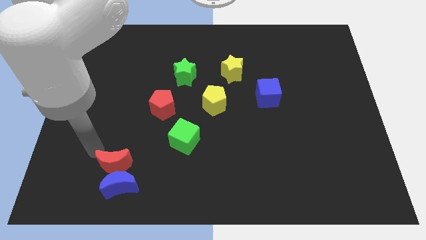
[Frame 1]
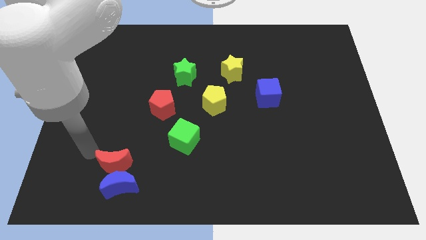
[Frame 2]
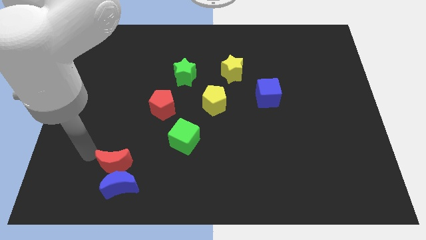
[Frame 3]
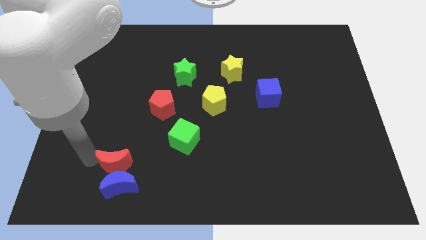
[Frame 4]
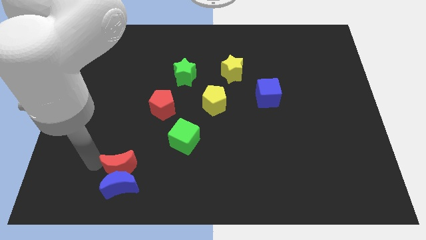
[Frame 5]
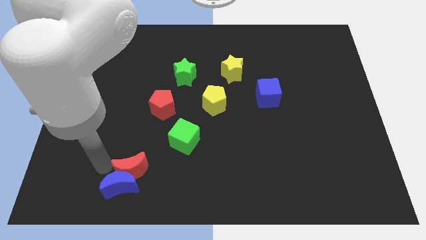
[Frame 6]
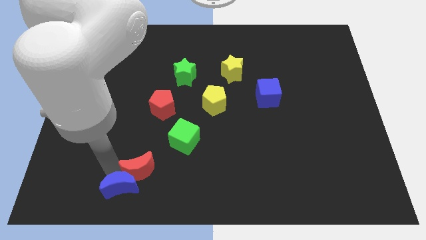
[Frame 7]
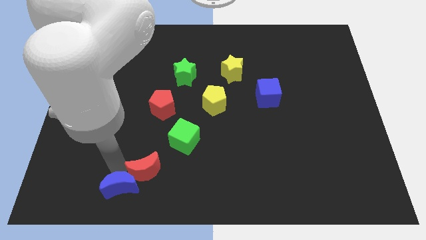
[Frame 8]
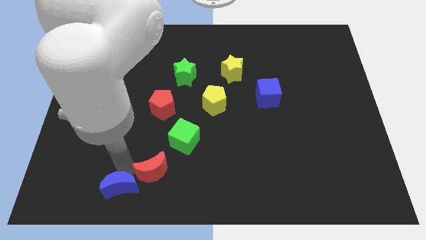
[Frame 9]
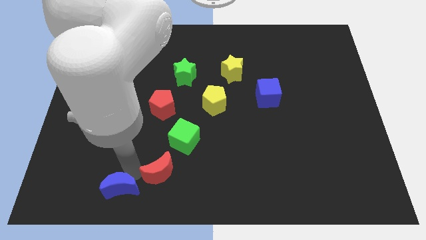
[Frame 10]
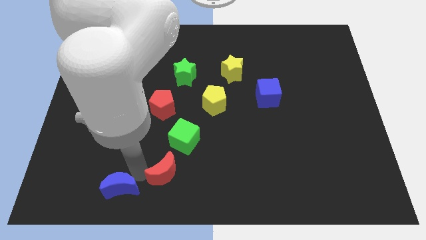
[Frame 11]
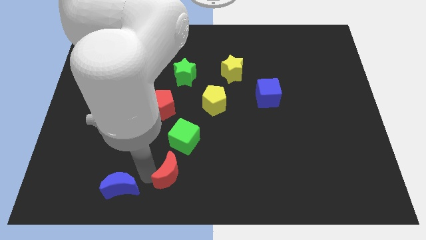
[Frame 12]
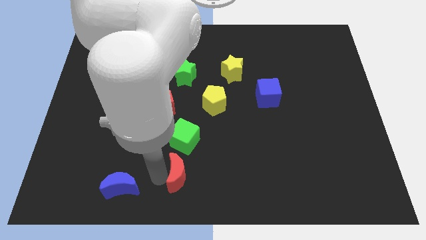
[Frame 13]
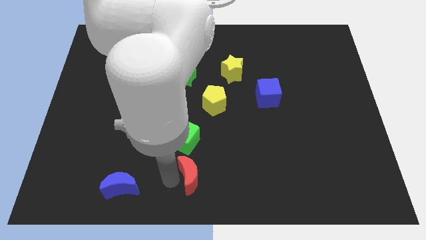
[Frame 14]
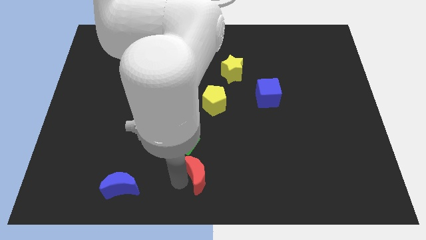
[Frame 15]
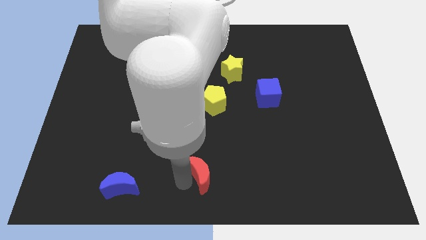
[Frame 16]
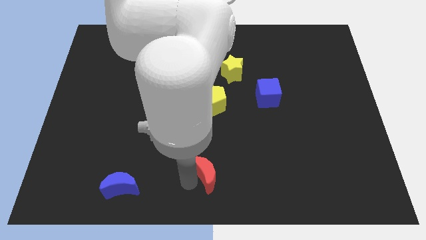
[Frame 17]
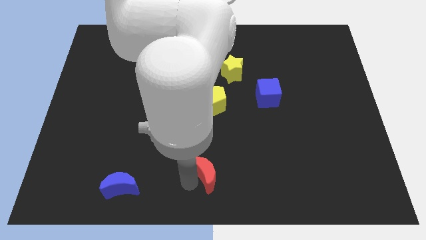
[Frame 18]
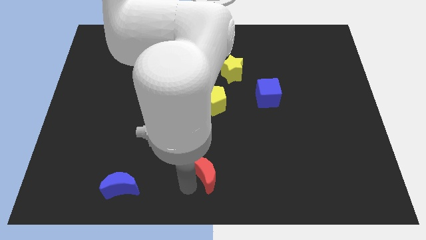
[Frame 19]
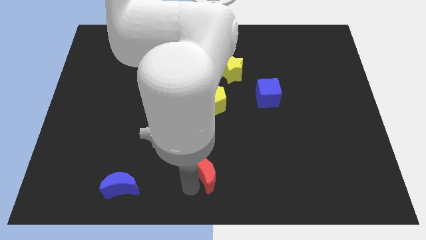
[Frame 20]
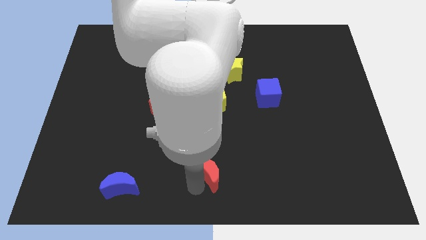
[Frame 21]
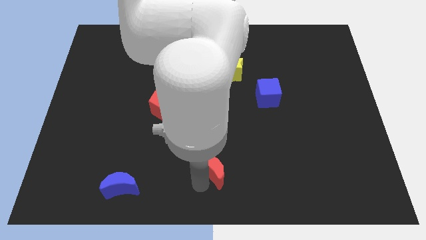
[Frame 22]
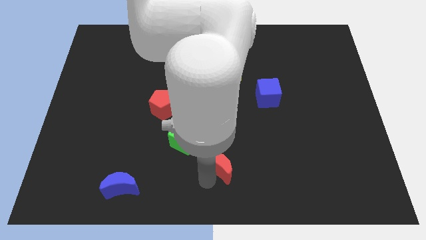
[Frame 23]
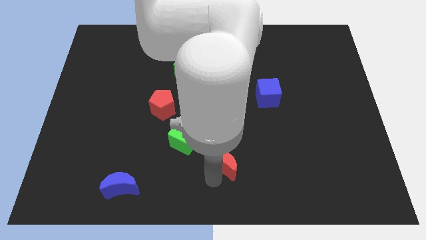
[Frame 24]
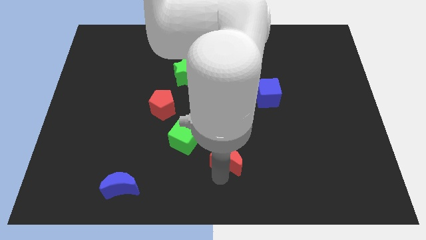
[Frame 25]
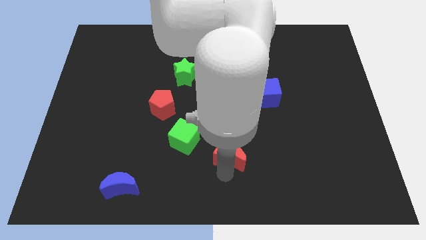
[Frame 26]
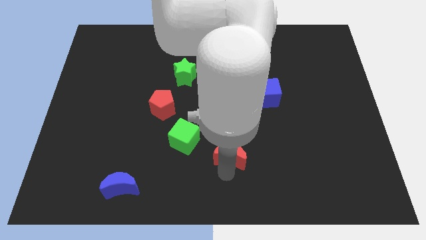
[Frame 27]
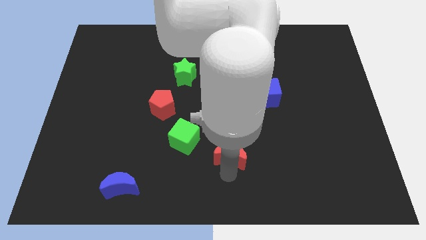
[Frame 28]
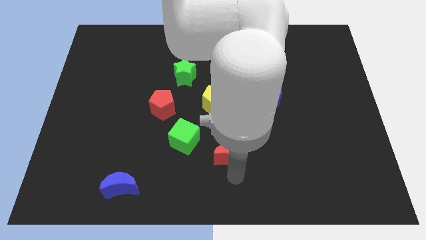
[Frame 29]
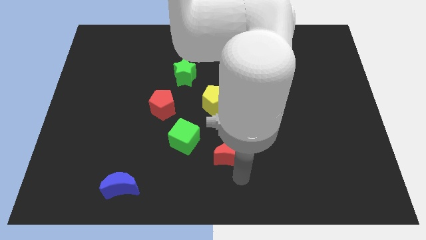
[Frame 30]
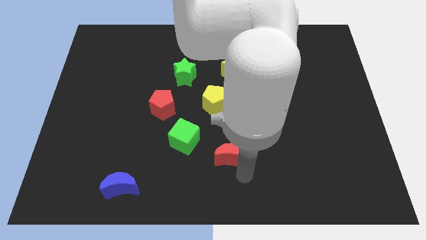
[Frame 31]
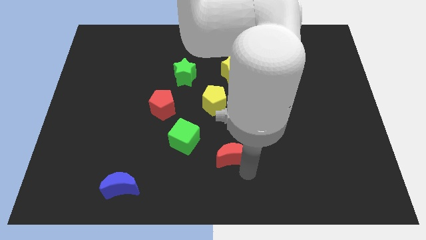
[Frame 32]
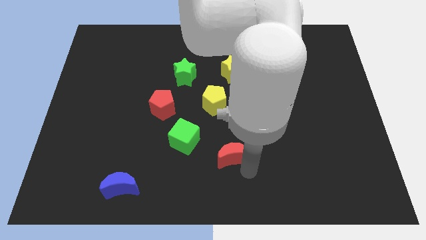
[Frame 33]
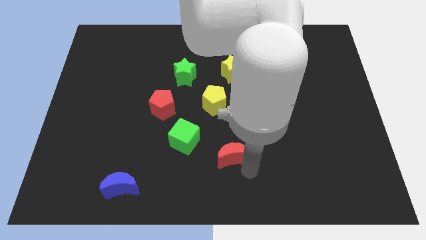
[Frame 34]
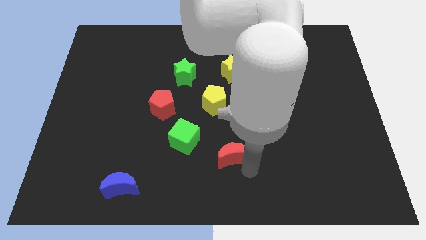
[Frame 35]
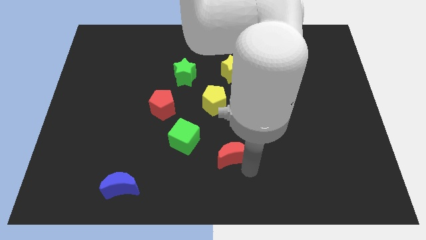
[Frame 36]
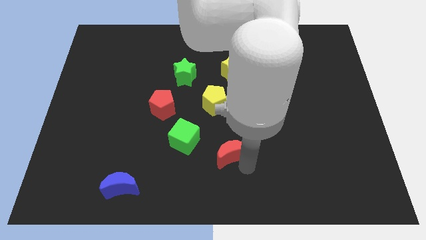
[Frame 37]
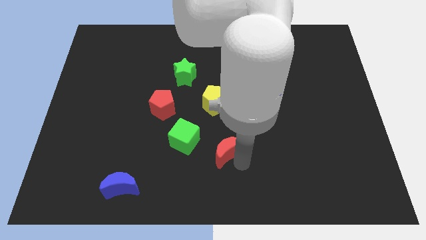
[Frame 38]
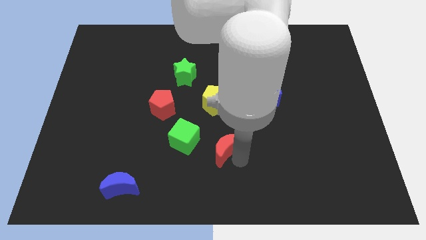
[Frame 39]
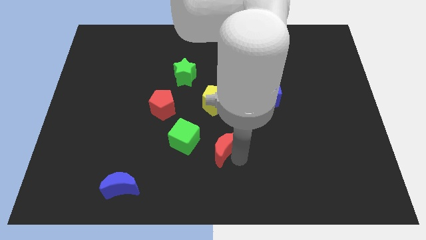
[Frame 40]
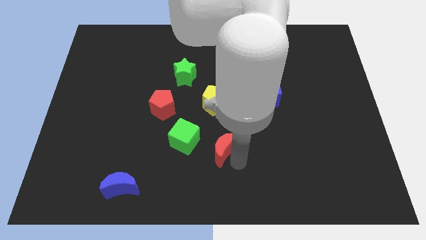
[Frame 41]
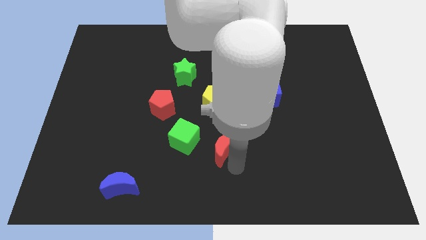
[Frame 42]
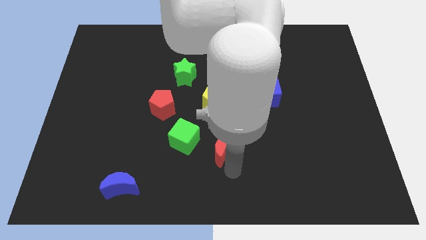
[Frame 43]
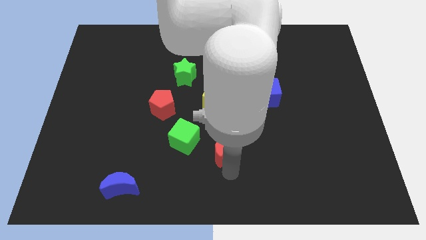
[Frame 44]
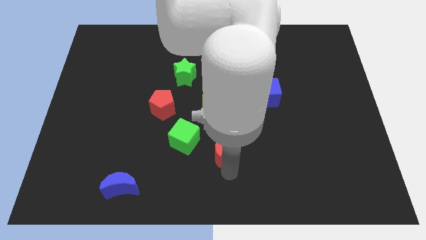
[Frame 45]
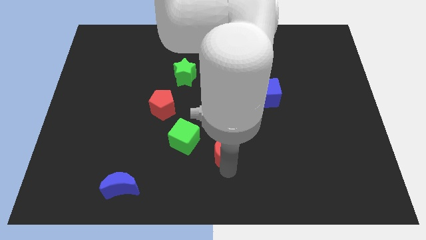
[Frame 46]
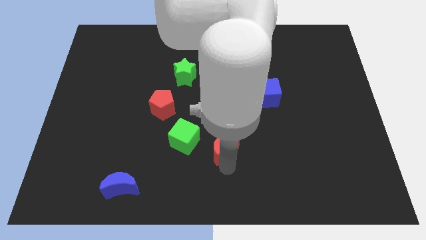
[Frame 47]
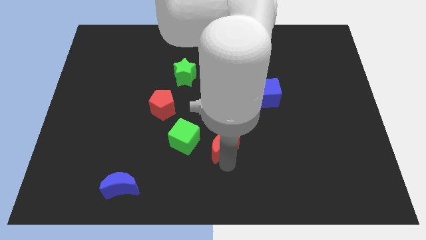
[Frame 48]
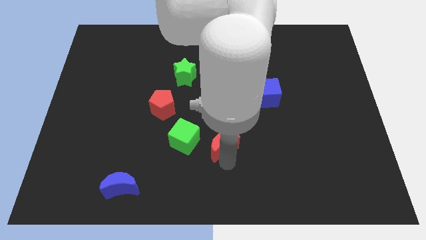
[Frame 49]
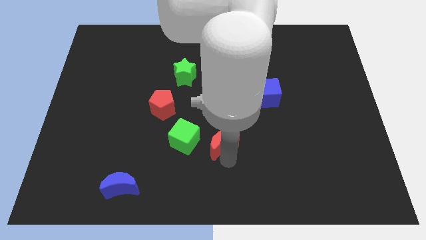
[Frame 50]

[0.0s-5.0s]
separate red moon from the blue moon

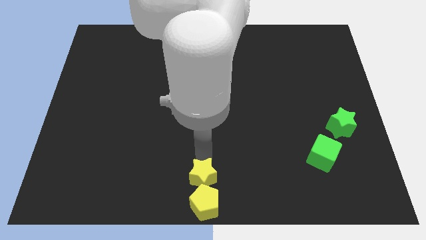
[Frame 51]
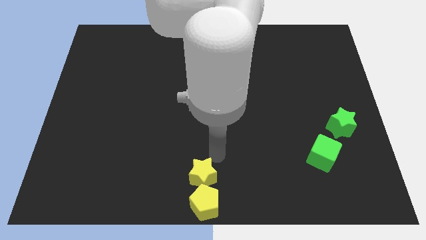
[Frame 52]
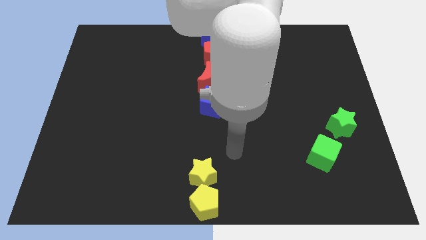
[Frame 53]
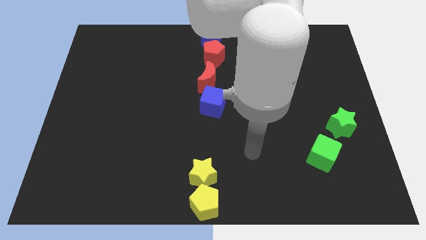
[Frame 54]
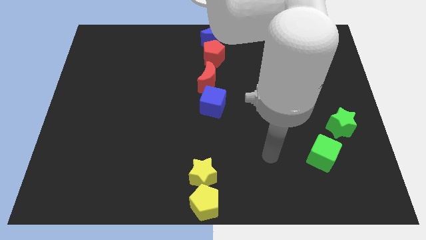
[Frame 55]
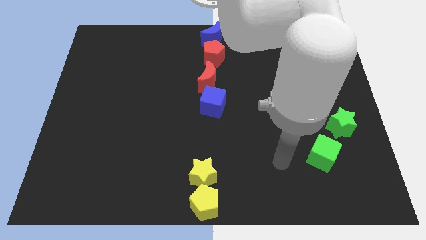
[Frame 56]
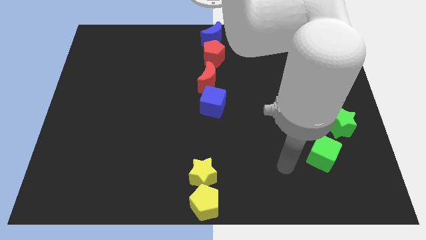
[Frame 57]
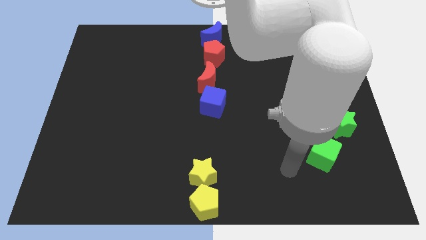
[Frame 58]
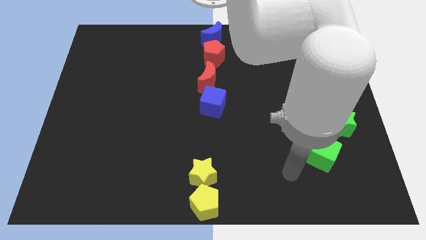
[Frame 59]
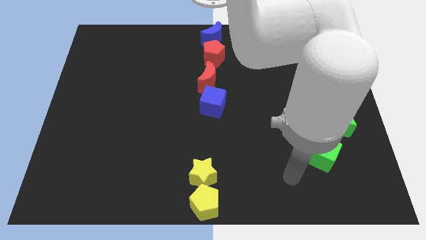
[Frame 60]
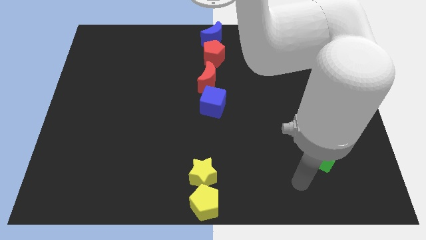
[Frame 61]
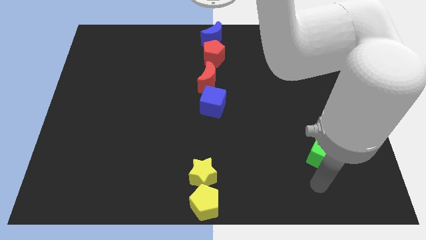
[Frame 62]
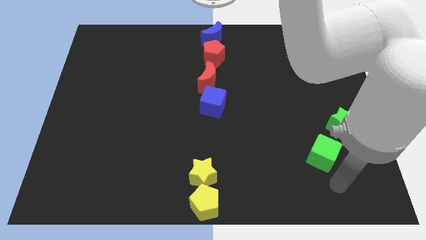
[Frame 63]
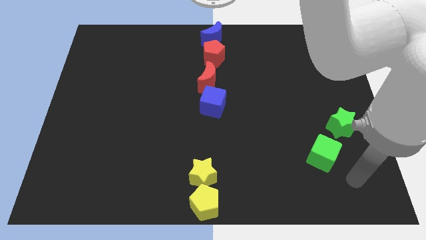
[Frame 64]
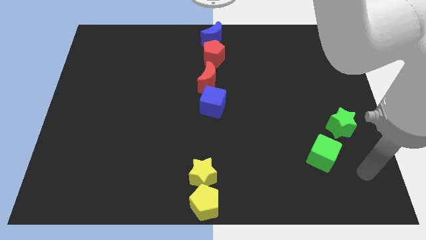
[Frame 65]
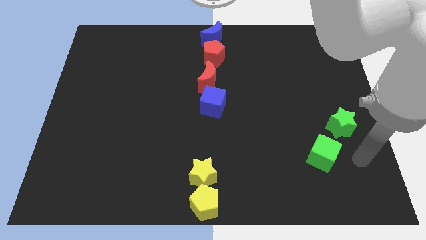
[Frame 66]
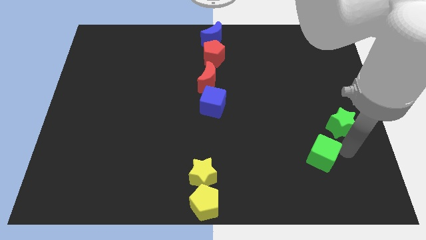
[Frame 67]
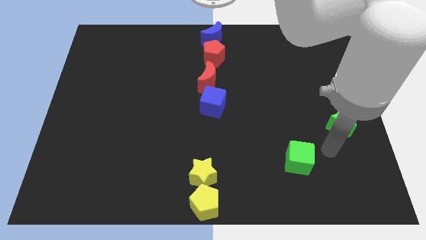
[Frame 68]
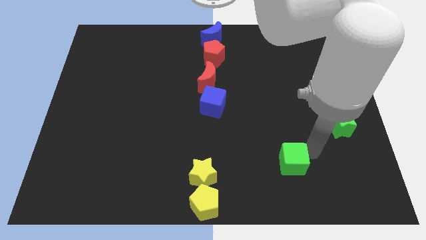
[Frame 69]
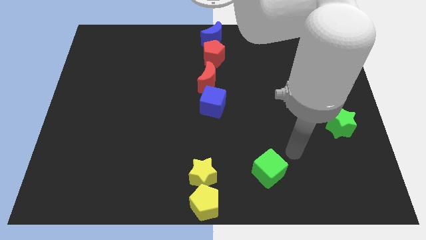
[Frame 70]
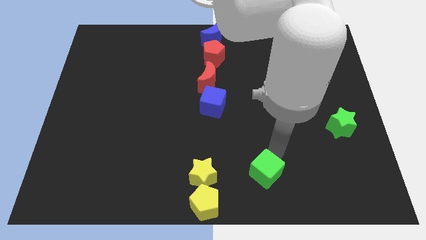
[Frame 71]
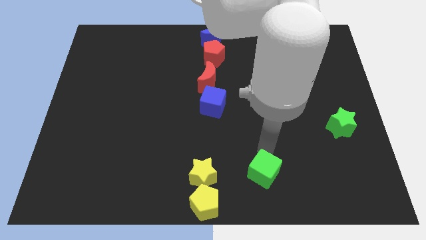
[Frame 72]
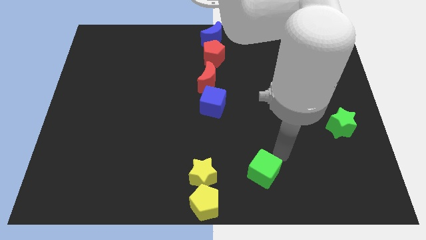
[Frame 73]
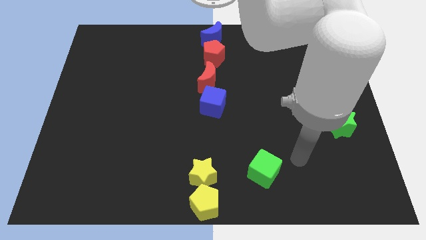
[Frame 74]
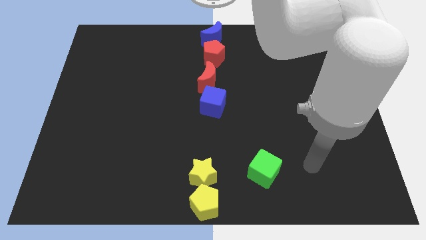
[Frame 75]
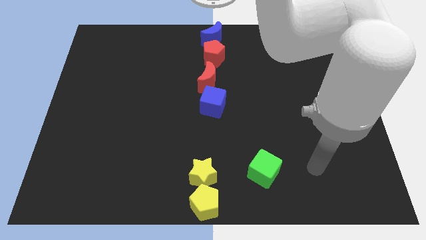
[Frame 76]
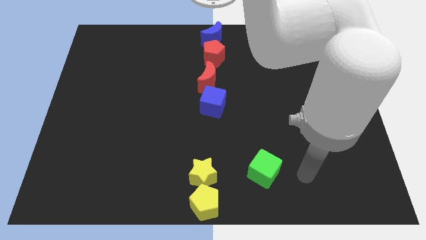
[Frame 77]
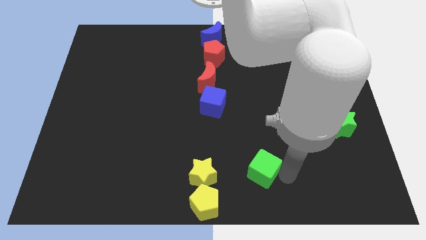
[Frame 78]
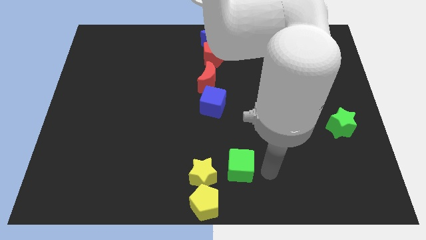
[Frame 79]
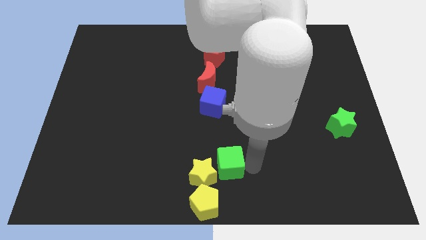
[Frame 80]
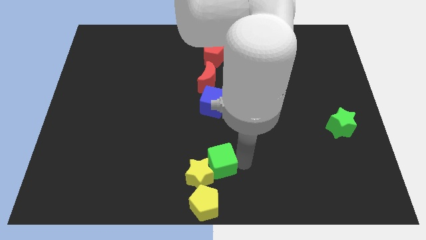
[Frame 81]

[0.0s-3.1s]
place green cube beside yellow star

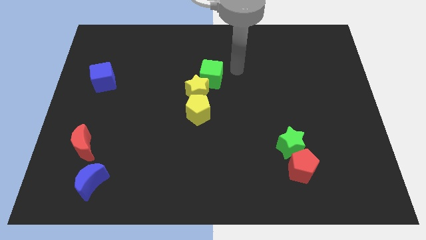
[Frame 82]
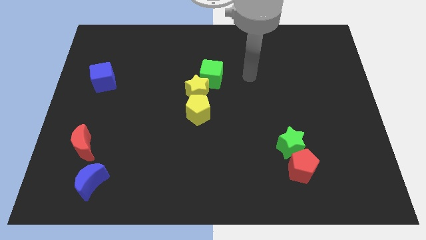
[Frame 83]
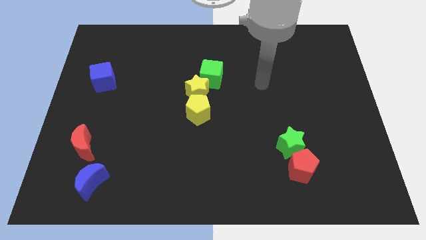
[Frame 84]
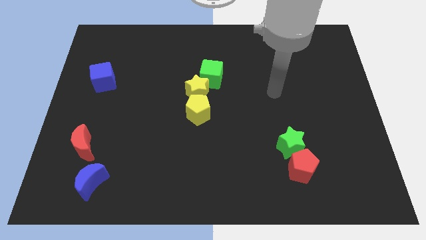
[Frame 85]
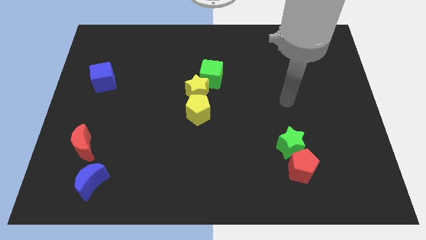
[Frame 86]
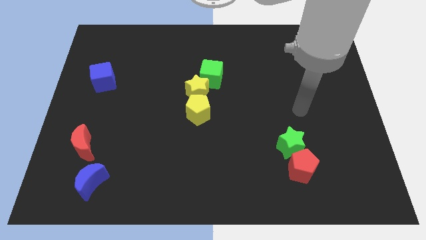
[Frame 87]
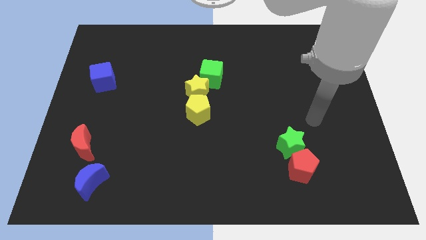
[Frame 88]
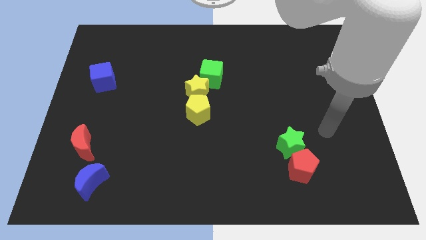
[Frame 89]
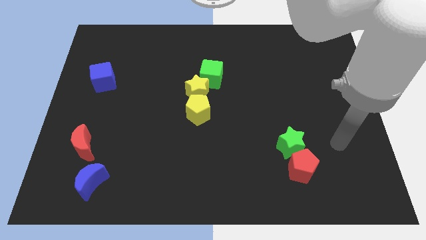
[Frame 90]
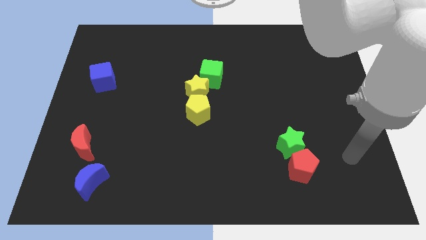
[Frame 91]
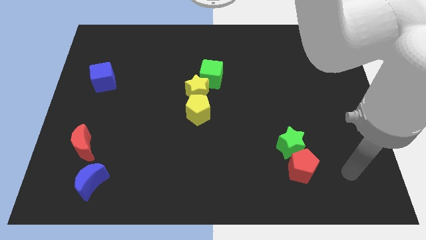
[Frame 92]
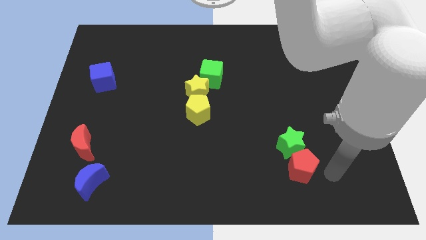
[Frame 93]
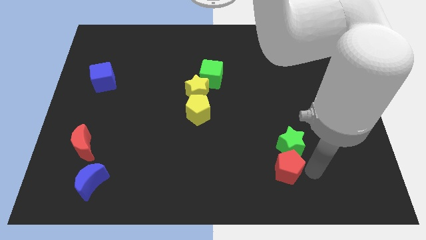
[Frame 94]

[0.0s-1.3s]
move your arm towards red pentagon
